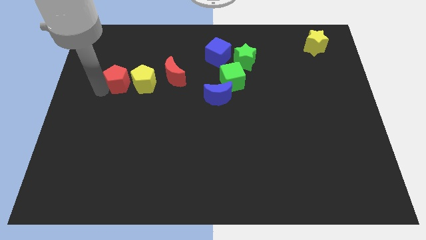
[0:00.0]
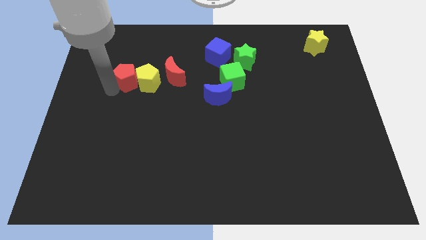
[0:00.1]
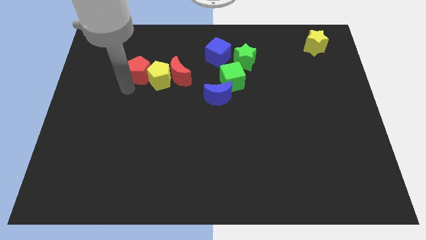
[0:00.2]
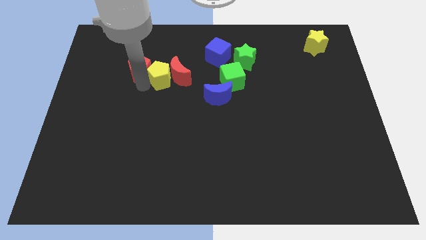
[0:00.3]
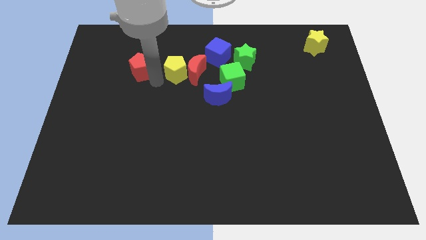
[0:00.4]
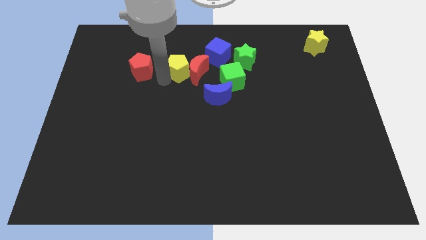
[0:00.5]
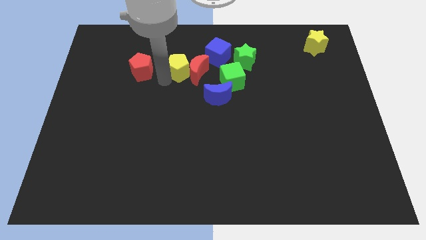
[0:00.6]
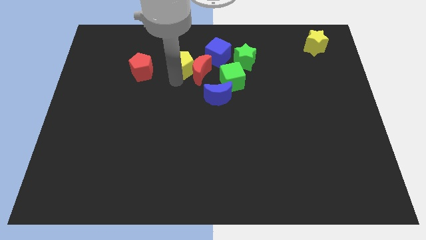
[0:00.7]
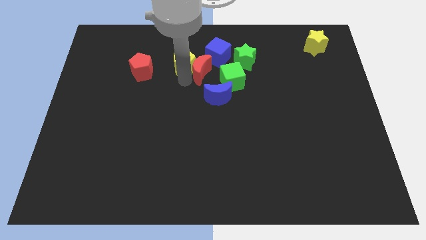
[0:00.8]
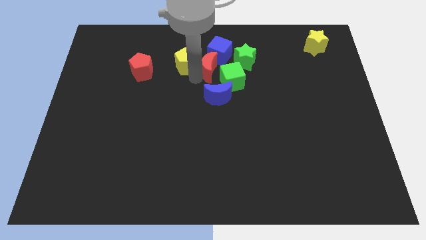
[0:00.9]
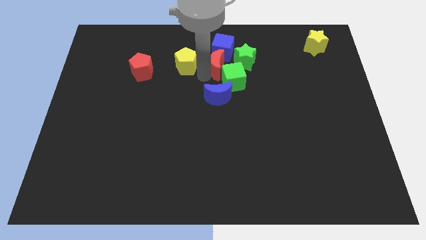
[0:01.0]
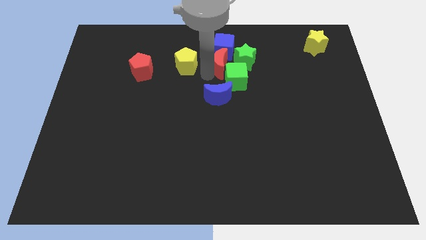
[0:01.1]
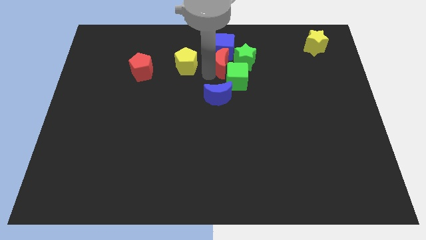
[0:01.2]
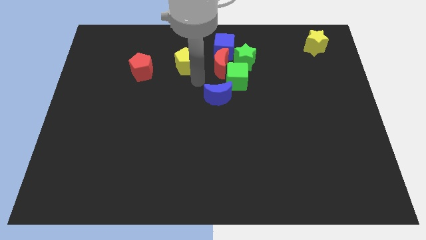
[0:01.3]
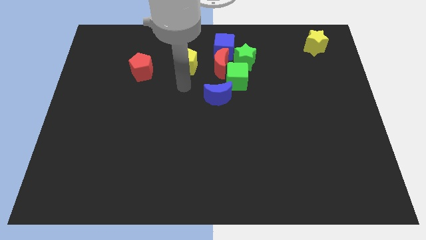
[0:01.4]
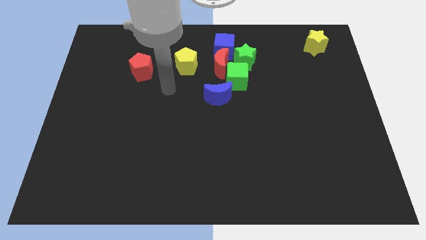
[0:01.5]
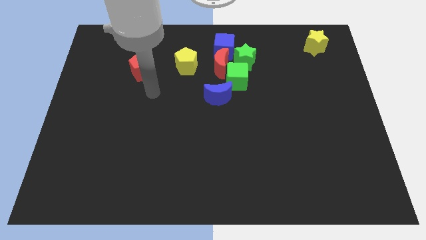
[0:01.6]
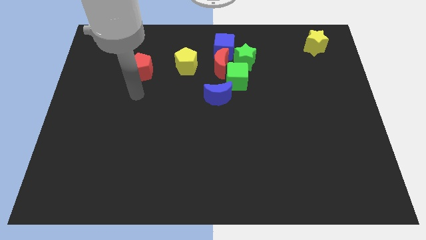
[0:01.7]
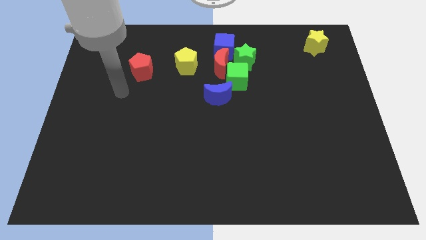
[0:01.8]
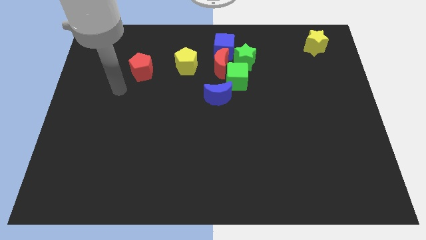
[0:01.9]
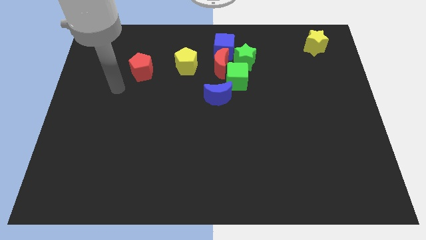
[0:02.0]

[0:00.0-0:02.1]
push the red pentagon yellow pentagon and red moon towards right side

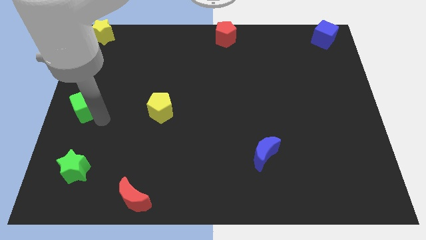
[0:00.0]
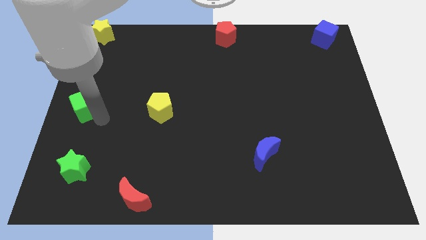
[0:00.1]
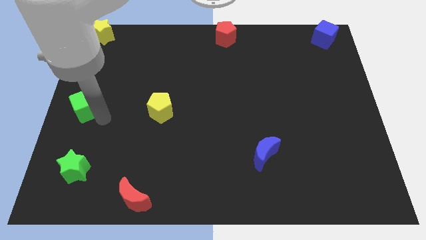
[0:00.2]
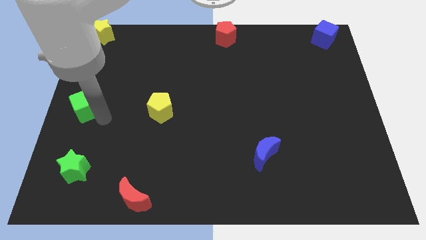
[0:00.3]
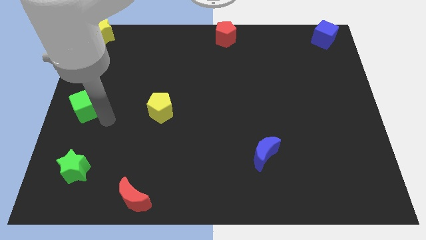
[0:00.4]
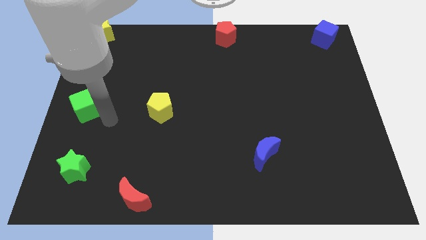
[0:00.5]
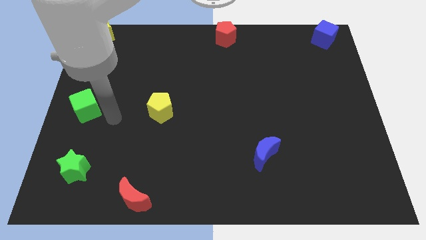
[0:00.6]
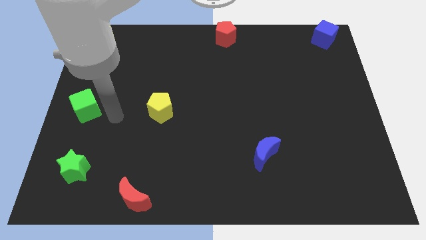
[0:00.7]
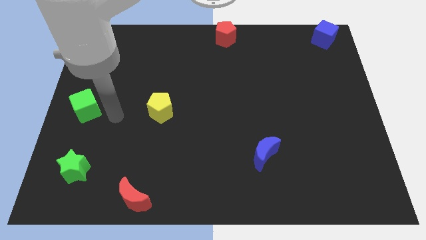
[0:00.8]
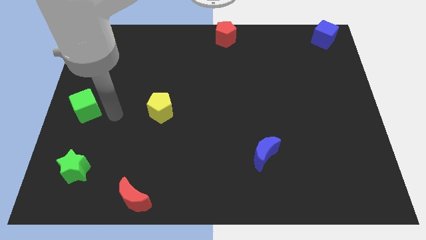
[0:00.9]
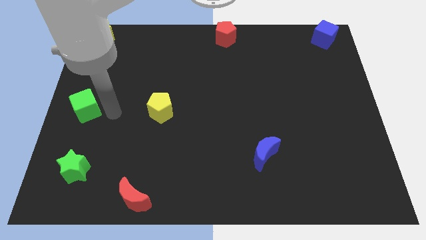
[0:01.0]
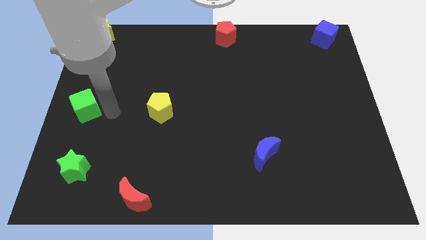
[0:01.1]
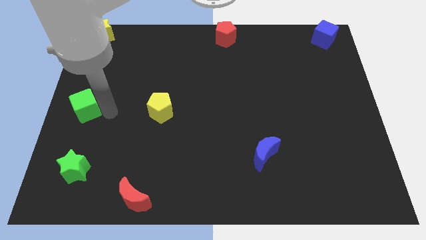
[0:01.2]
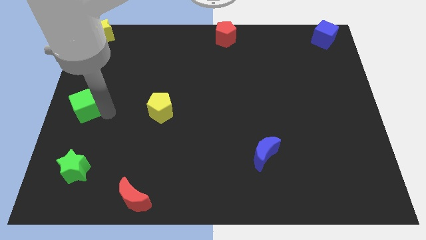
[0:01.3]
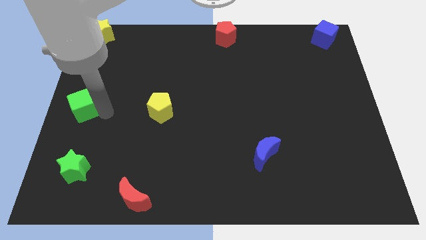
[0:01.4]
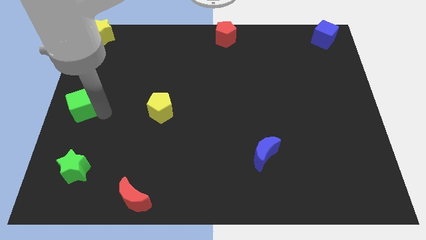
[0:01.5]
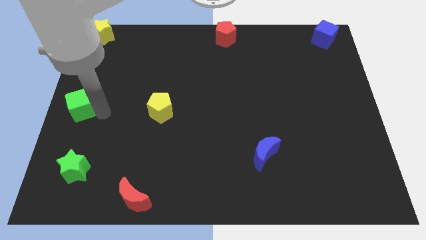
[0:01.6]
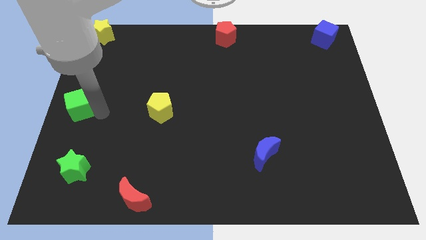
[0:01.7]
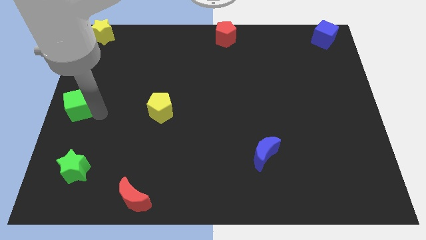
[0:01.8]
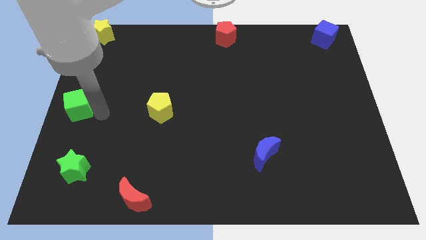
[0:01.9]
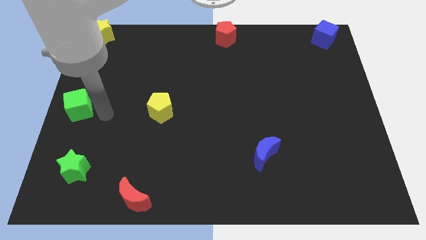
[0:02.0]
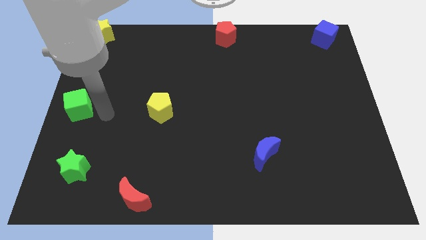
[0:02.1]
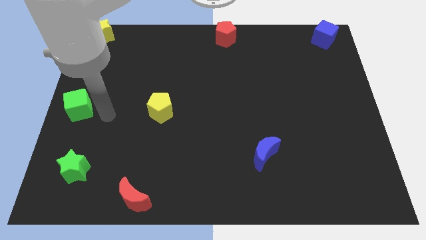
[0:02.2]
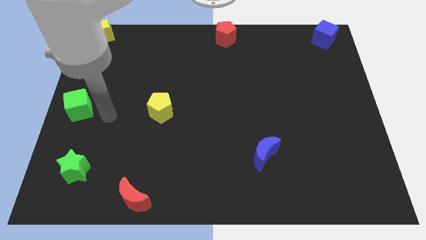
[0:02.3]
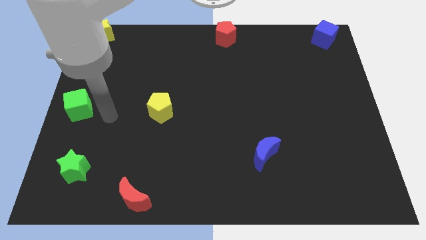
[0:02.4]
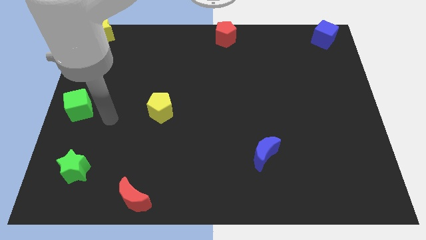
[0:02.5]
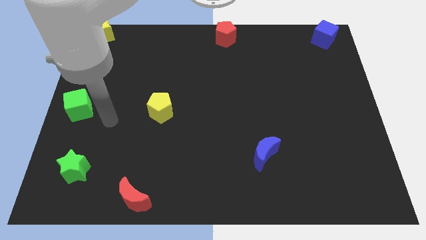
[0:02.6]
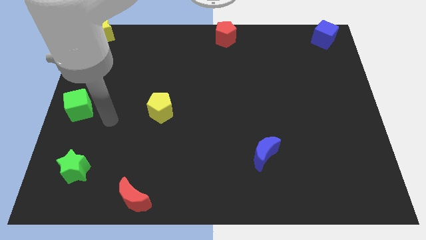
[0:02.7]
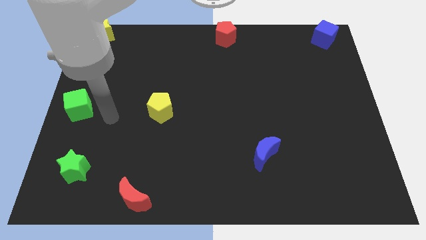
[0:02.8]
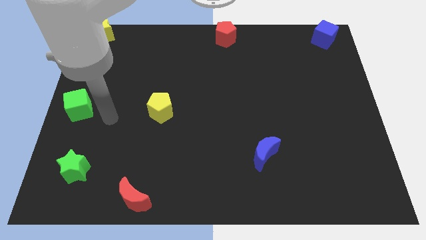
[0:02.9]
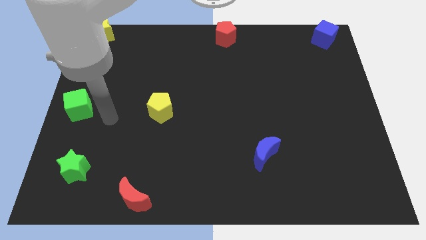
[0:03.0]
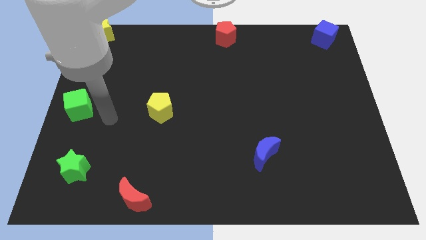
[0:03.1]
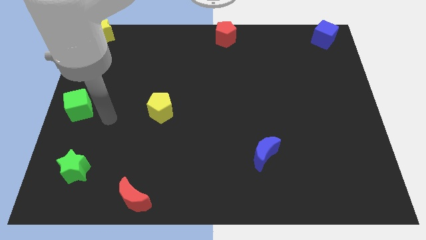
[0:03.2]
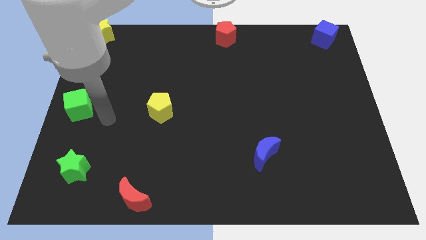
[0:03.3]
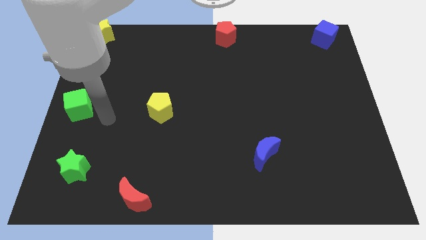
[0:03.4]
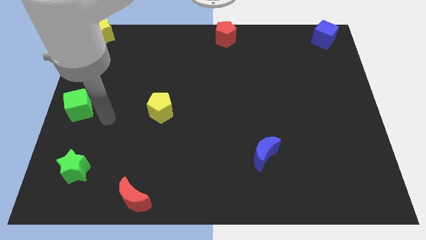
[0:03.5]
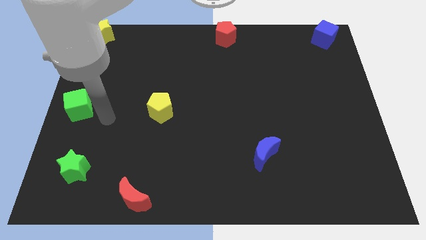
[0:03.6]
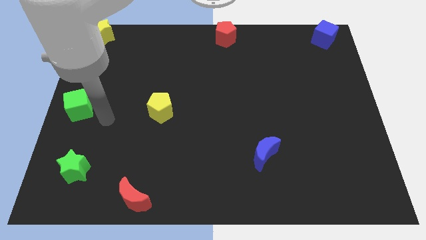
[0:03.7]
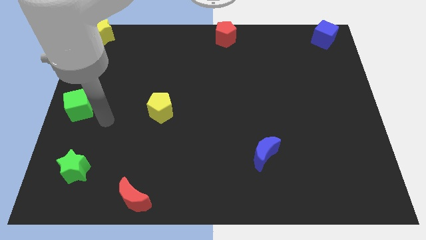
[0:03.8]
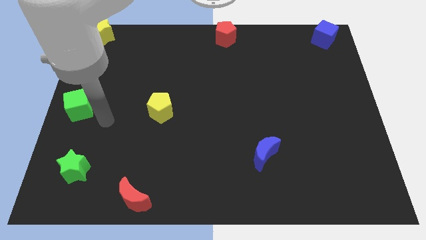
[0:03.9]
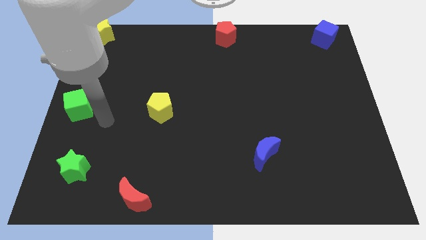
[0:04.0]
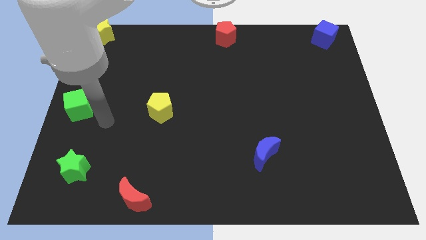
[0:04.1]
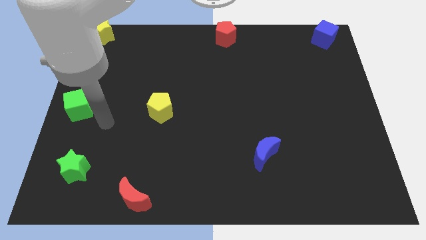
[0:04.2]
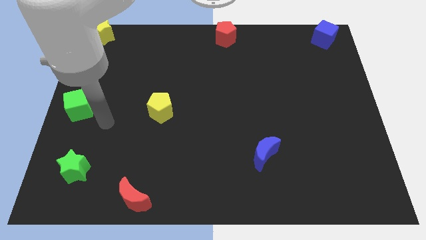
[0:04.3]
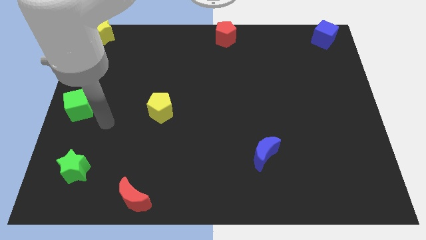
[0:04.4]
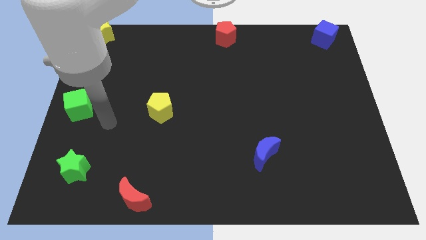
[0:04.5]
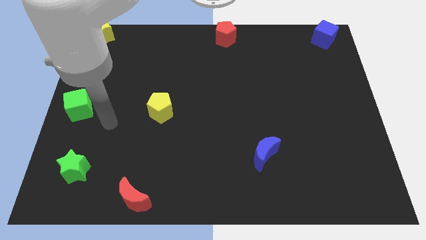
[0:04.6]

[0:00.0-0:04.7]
push green cube to the left center

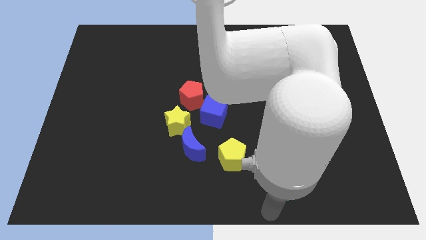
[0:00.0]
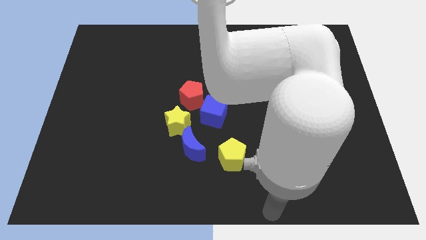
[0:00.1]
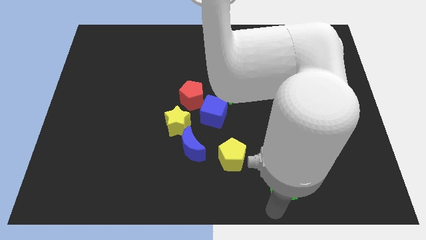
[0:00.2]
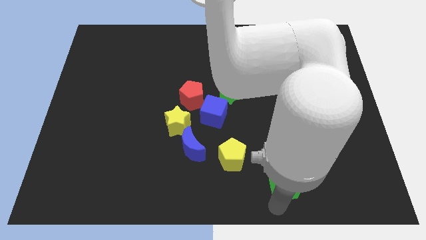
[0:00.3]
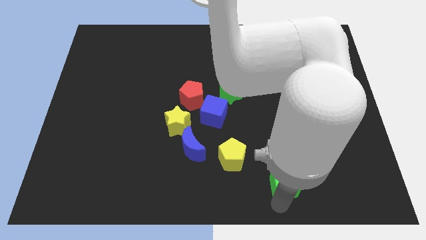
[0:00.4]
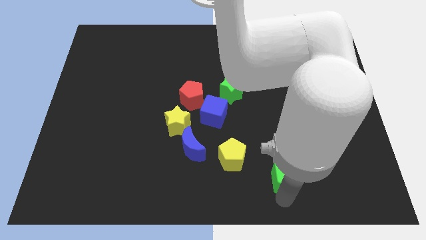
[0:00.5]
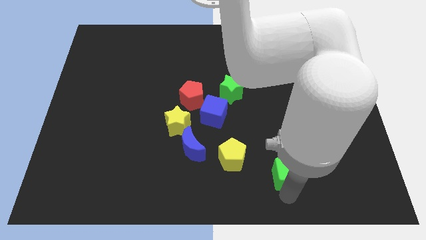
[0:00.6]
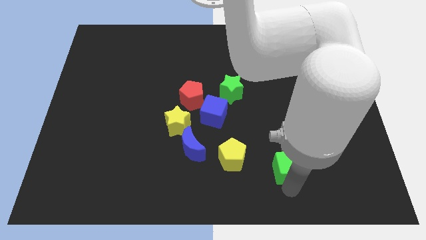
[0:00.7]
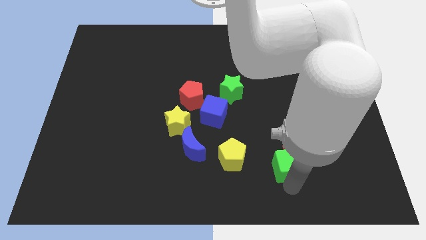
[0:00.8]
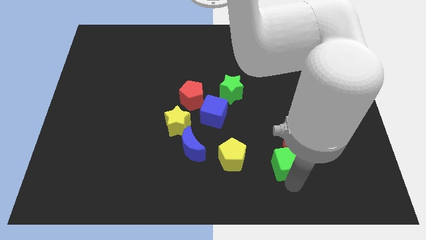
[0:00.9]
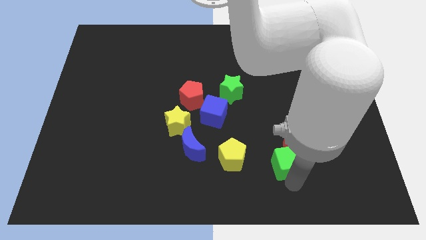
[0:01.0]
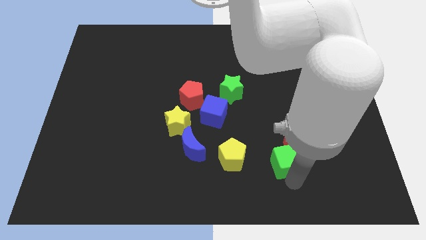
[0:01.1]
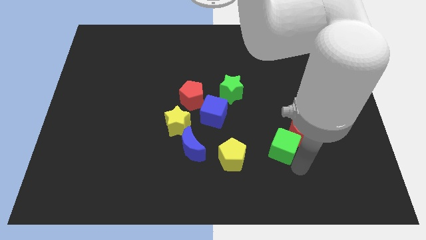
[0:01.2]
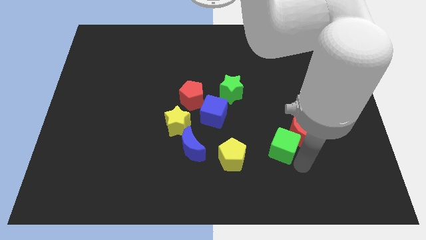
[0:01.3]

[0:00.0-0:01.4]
slightly move the green cube towards up

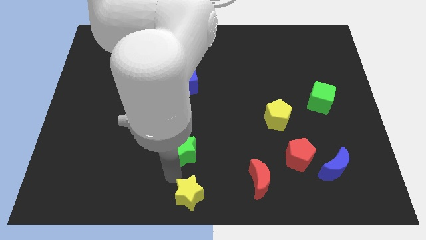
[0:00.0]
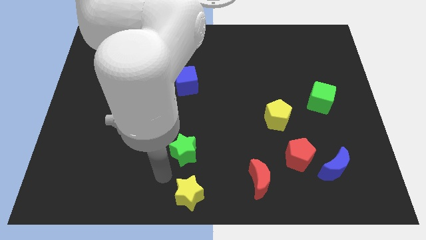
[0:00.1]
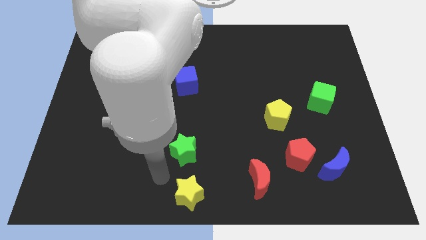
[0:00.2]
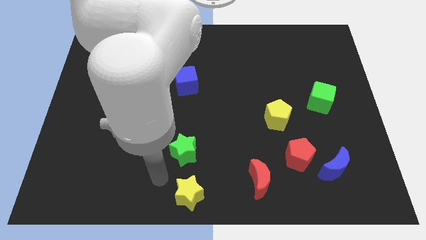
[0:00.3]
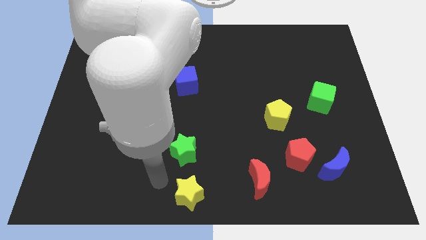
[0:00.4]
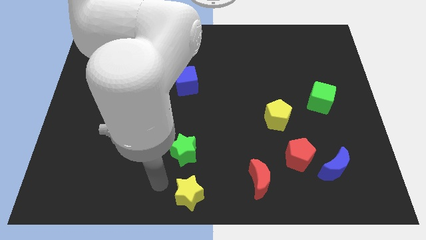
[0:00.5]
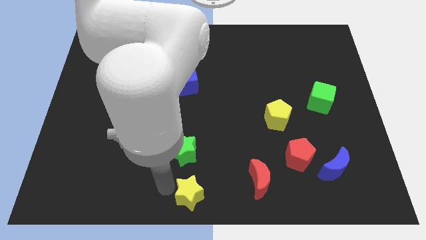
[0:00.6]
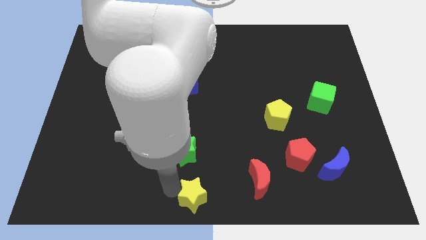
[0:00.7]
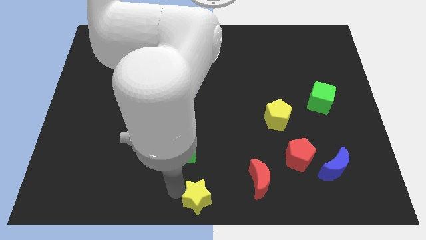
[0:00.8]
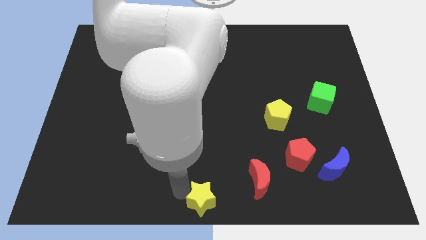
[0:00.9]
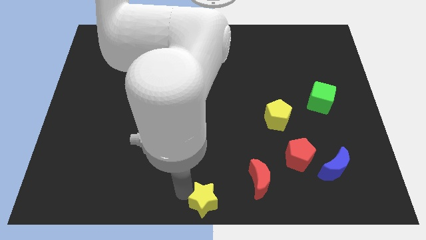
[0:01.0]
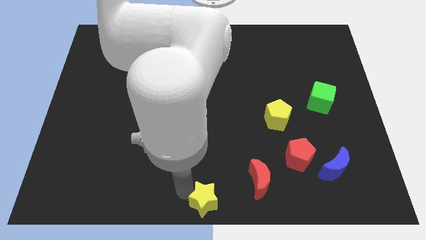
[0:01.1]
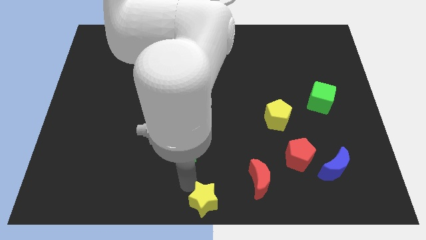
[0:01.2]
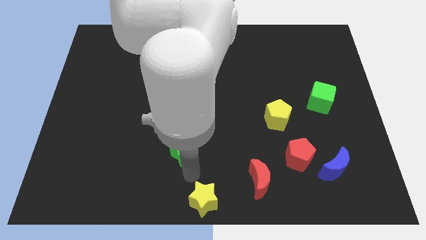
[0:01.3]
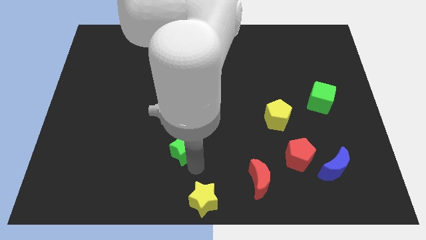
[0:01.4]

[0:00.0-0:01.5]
push the yellow star slightly downwards
